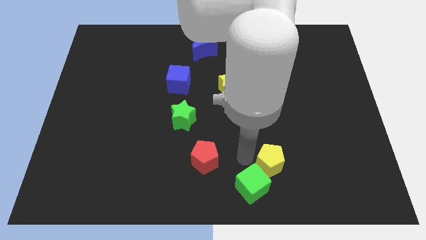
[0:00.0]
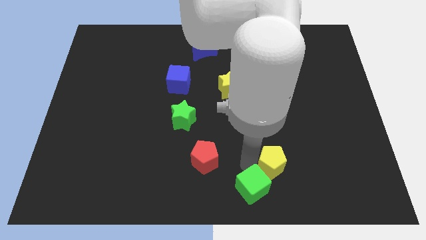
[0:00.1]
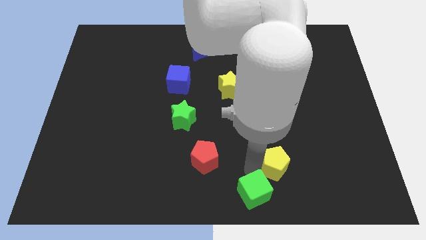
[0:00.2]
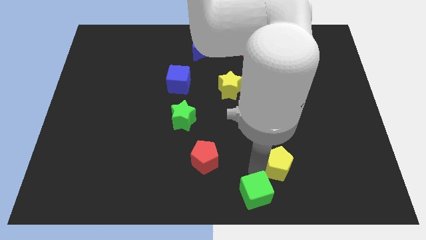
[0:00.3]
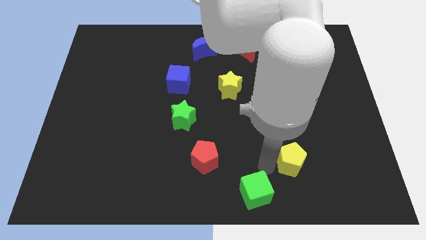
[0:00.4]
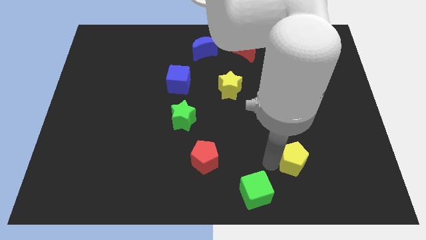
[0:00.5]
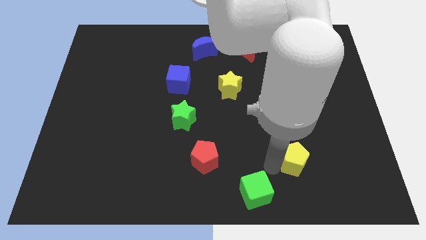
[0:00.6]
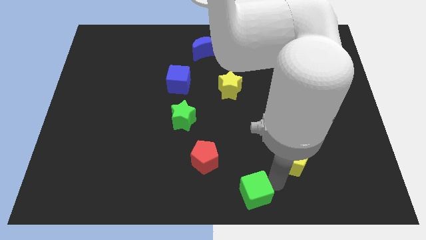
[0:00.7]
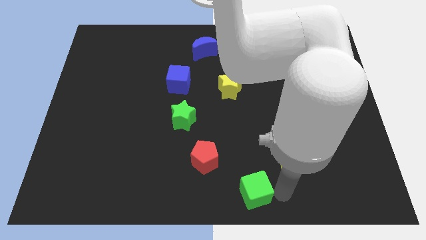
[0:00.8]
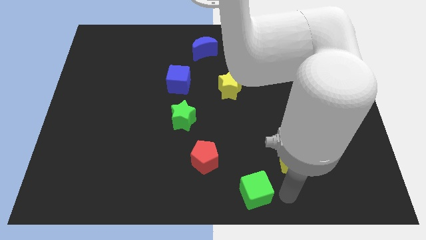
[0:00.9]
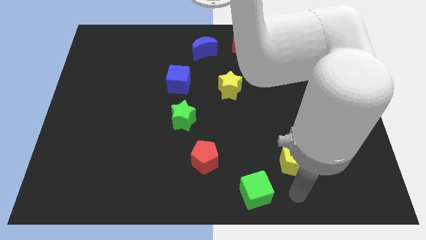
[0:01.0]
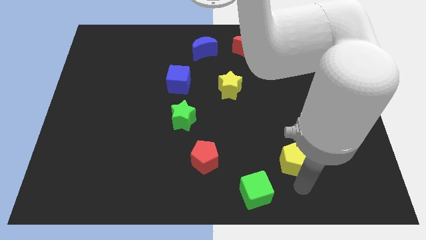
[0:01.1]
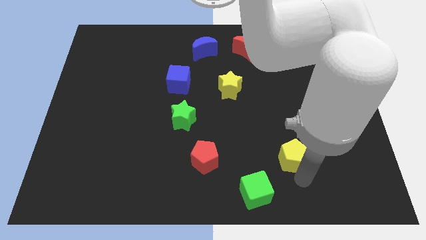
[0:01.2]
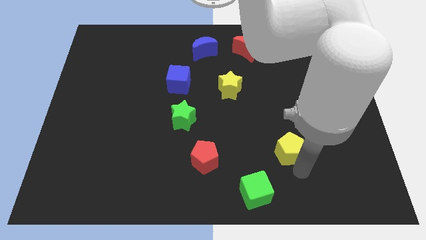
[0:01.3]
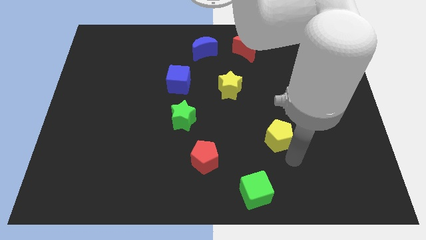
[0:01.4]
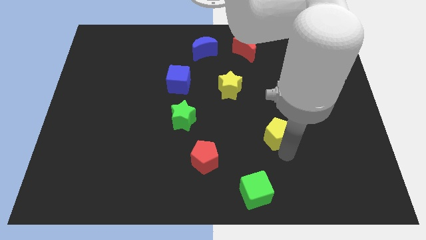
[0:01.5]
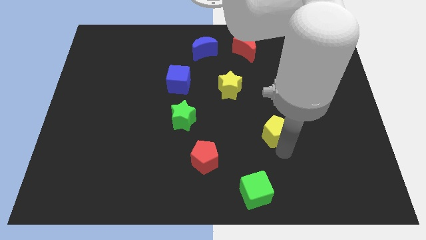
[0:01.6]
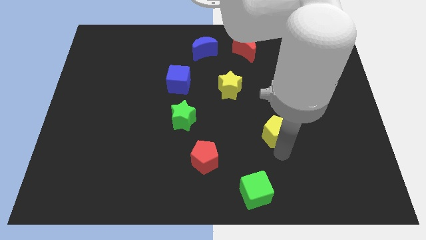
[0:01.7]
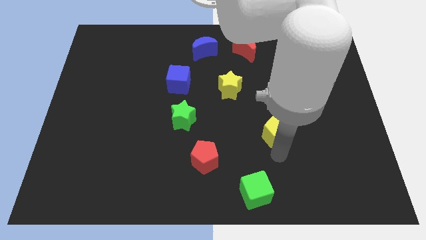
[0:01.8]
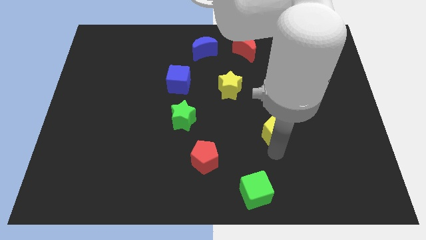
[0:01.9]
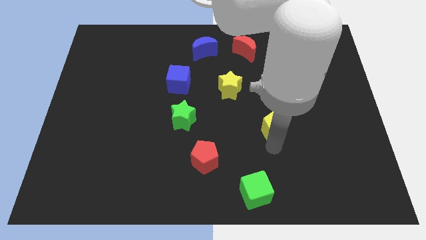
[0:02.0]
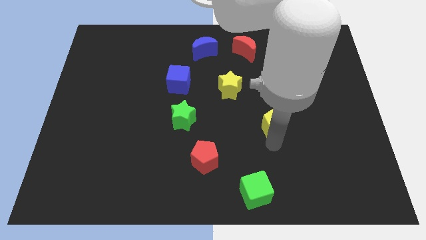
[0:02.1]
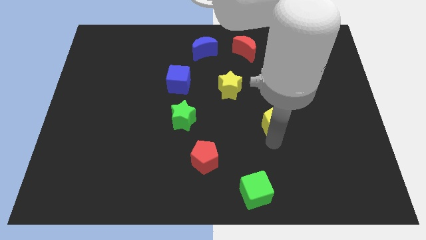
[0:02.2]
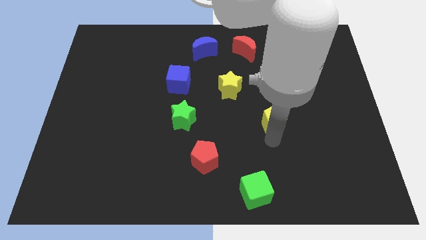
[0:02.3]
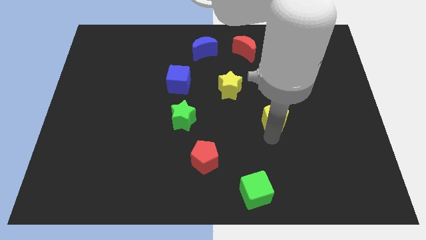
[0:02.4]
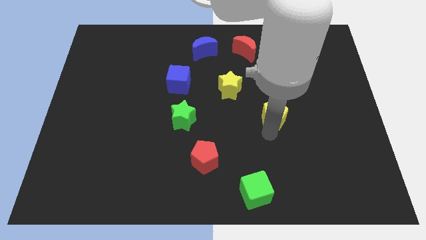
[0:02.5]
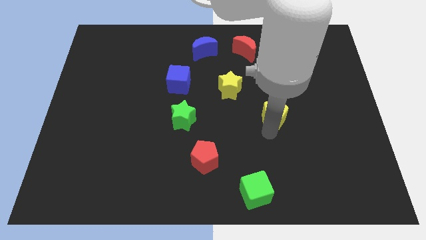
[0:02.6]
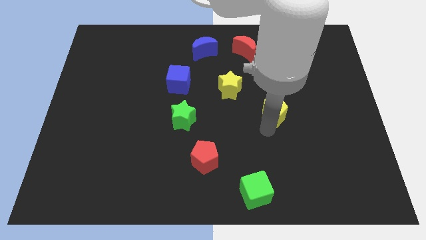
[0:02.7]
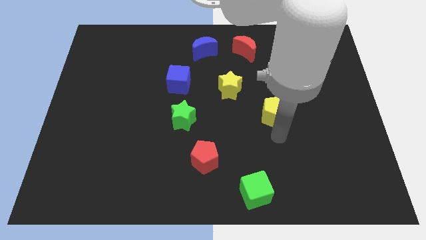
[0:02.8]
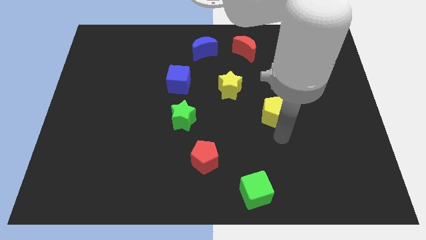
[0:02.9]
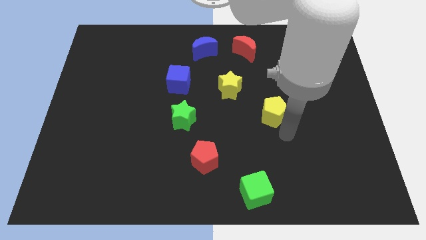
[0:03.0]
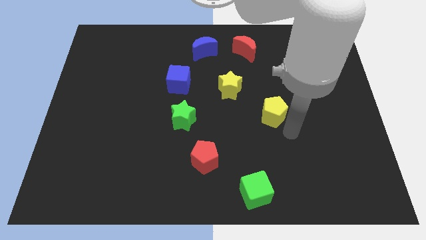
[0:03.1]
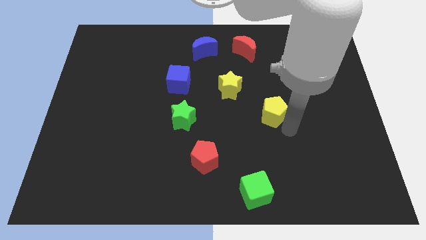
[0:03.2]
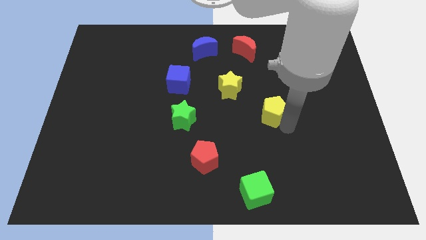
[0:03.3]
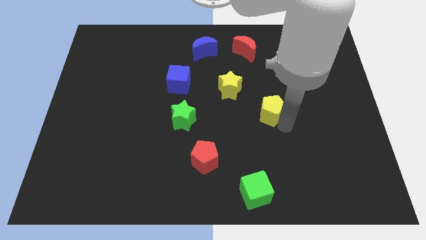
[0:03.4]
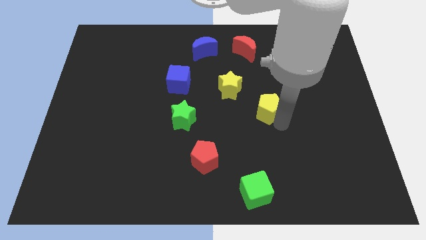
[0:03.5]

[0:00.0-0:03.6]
place the yellow pentagon right to the green star

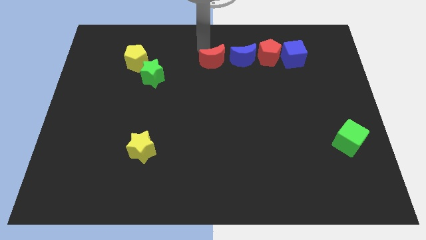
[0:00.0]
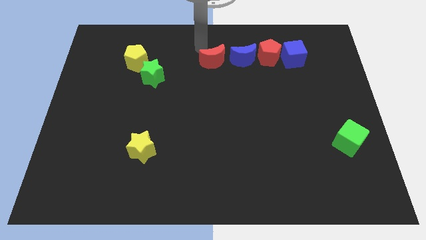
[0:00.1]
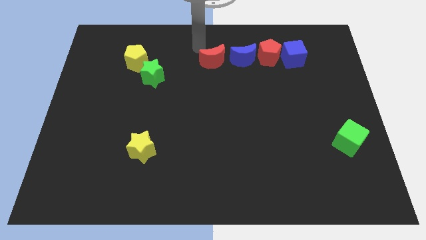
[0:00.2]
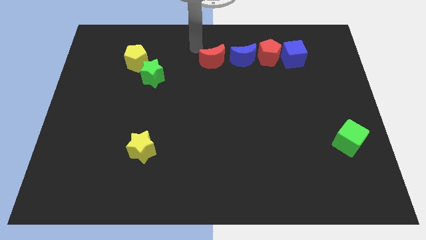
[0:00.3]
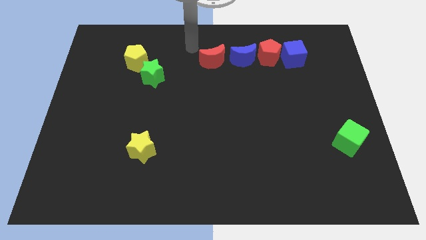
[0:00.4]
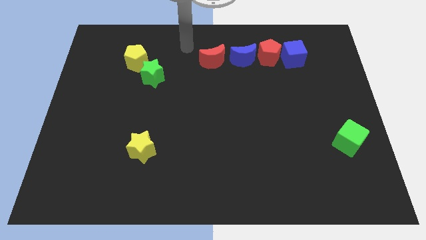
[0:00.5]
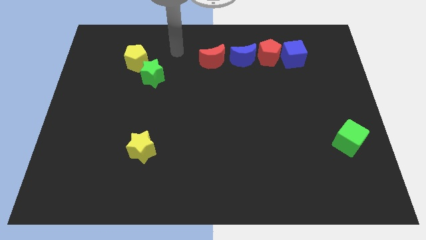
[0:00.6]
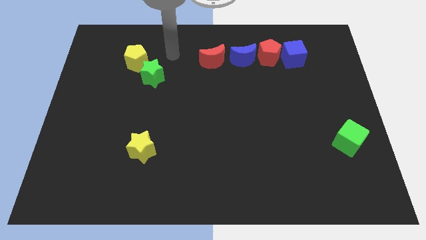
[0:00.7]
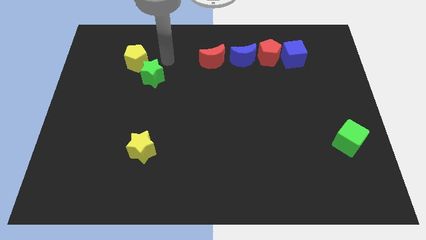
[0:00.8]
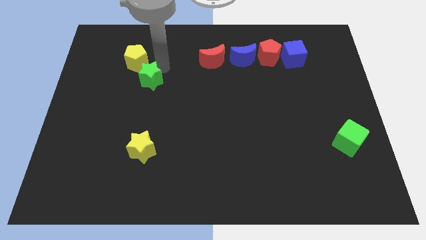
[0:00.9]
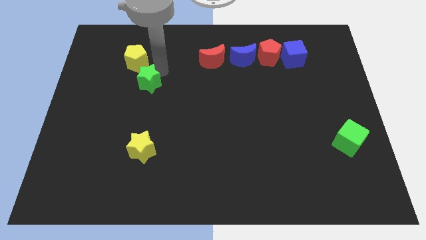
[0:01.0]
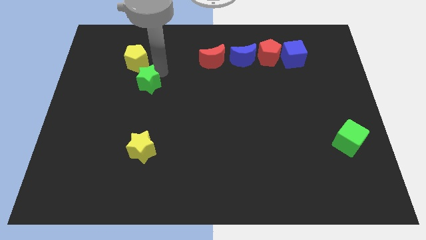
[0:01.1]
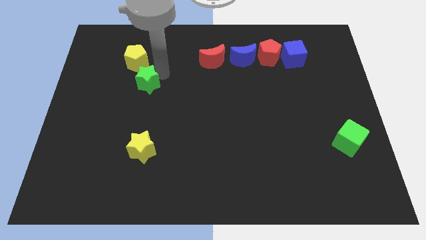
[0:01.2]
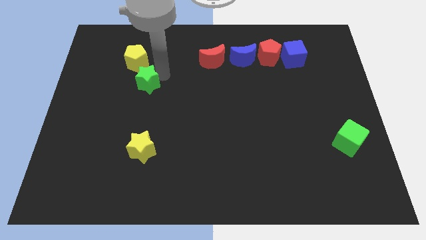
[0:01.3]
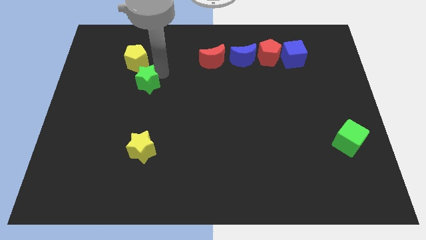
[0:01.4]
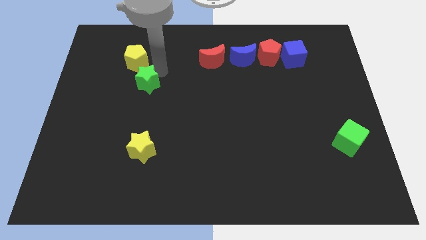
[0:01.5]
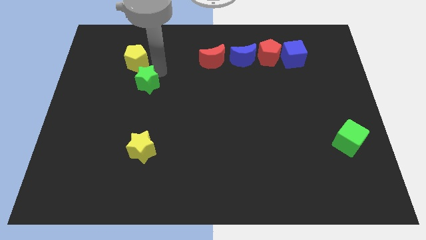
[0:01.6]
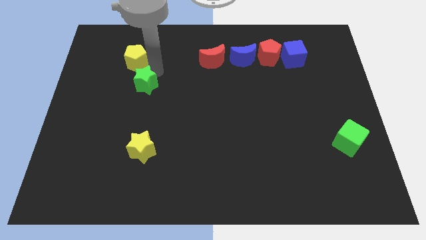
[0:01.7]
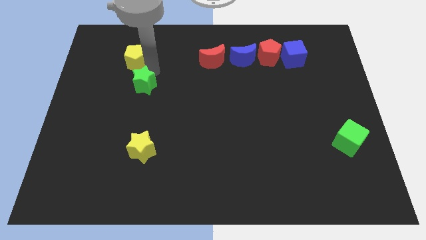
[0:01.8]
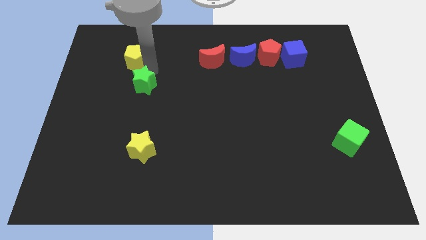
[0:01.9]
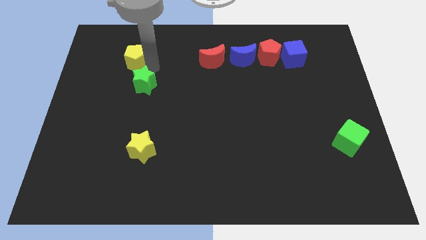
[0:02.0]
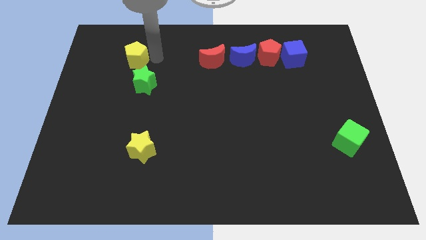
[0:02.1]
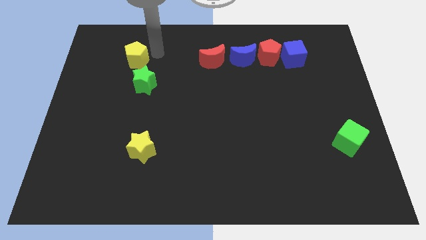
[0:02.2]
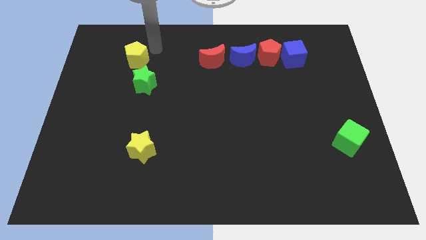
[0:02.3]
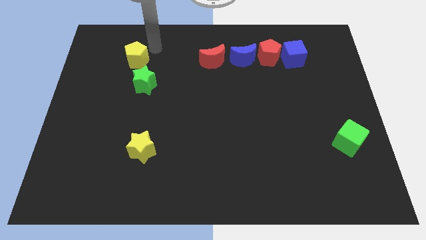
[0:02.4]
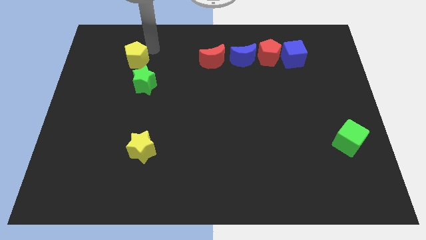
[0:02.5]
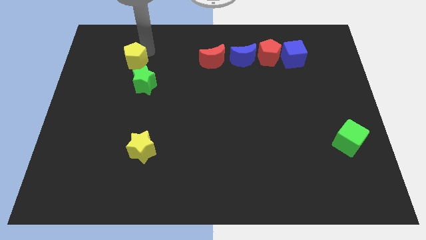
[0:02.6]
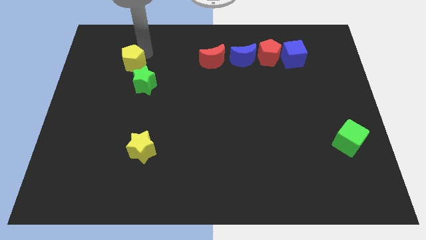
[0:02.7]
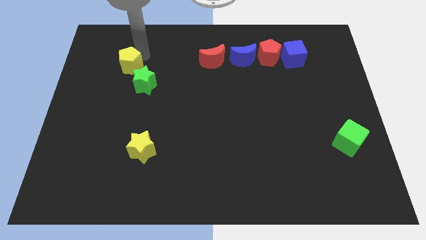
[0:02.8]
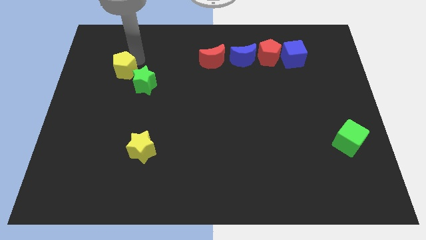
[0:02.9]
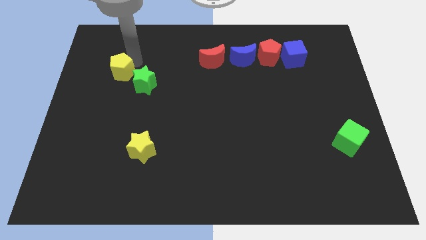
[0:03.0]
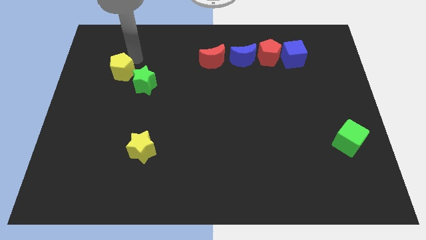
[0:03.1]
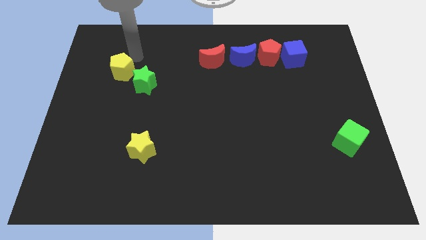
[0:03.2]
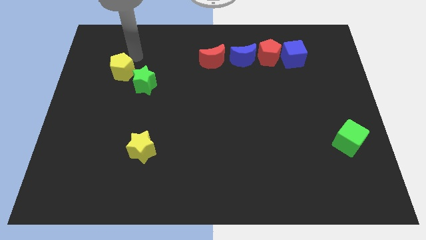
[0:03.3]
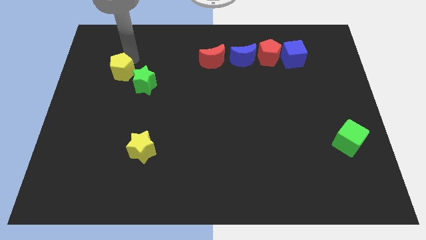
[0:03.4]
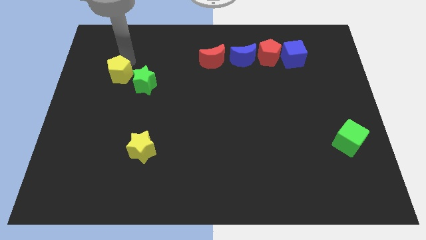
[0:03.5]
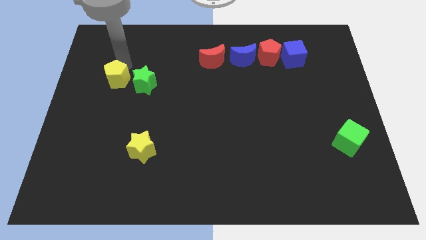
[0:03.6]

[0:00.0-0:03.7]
move the yellow pentagon to the left of the green star

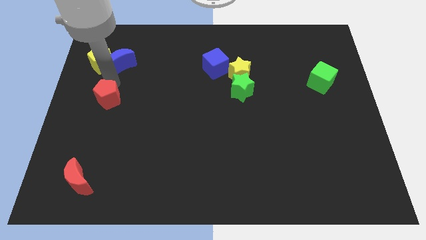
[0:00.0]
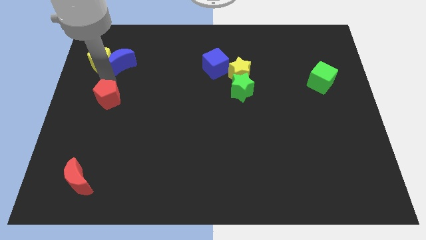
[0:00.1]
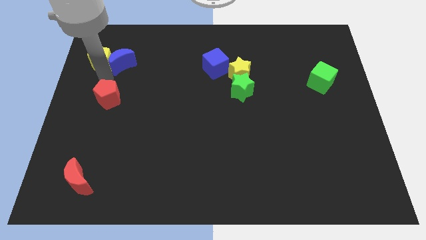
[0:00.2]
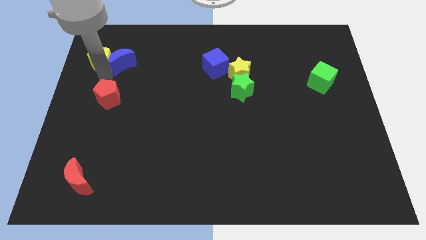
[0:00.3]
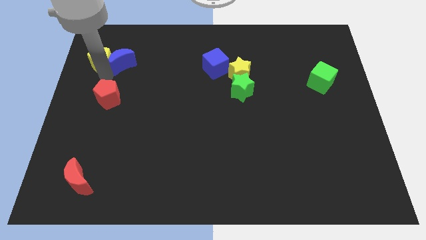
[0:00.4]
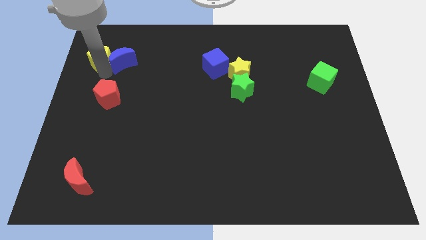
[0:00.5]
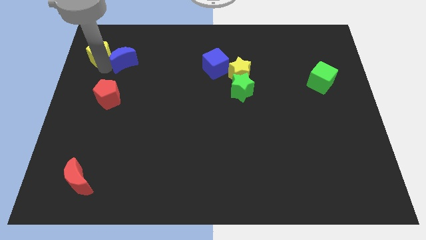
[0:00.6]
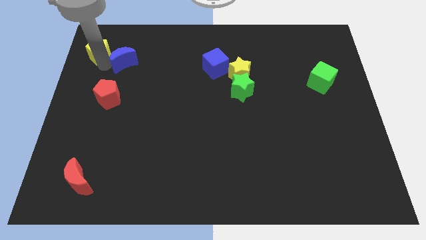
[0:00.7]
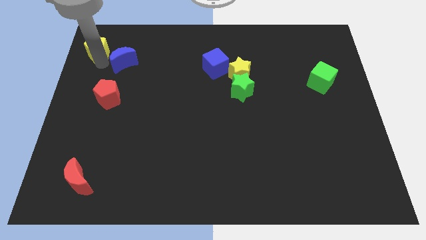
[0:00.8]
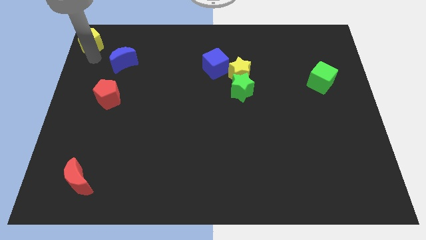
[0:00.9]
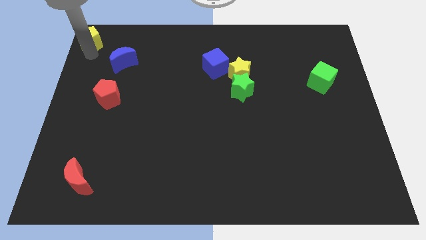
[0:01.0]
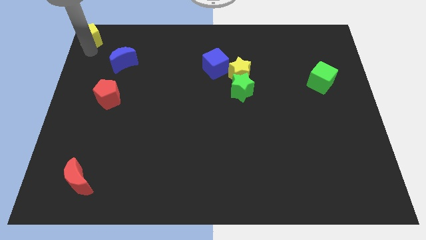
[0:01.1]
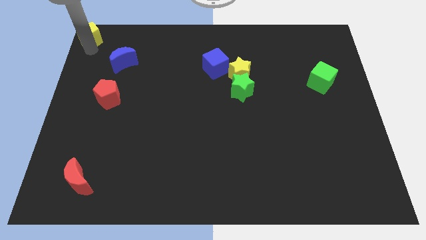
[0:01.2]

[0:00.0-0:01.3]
move yellow pentagon to the top left corner of the board

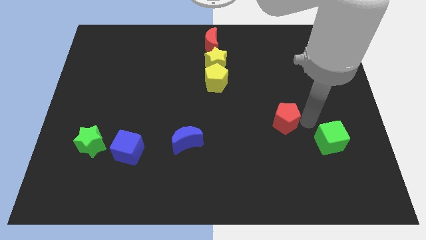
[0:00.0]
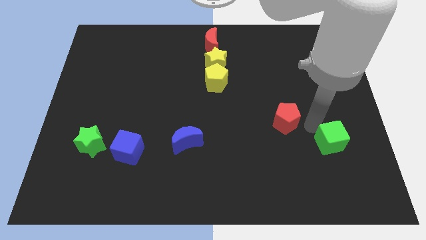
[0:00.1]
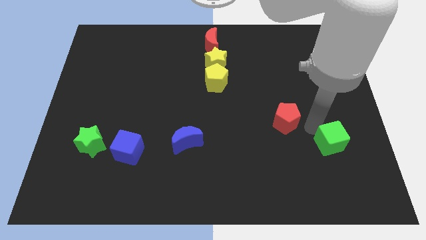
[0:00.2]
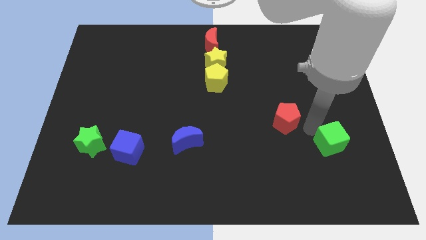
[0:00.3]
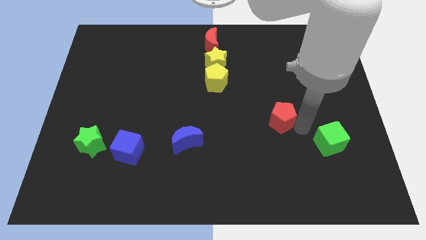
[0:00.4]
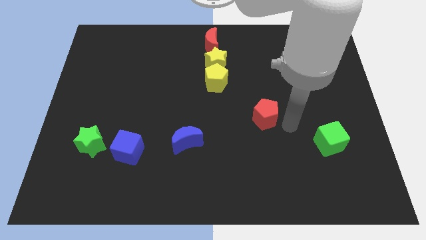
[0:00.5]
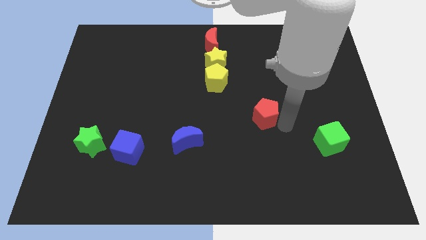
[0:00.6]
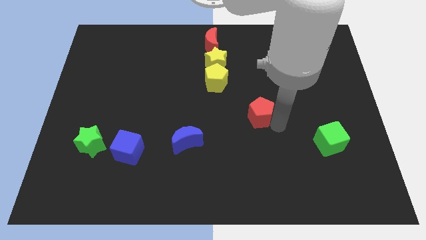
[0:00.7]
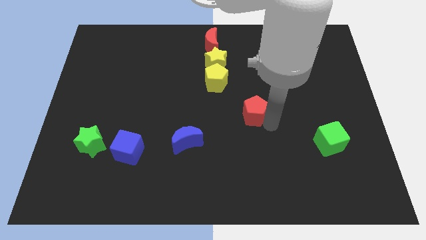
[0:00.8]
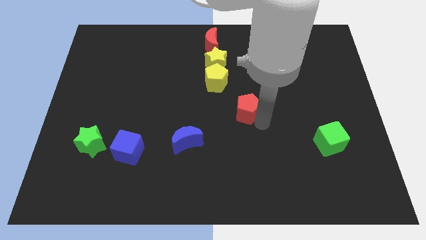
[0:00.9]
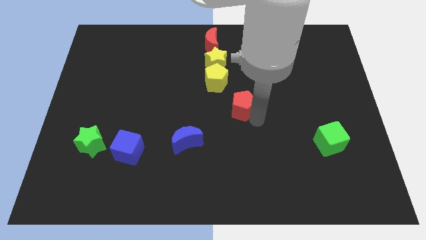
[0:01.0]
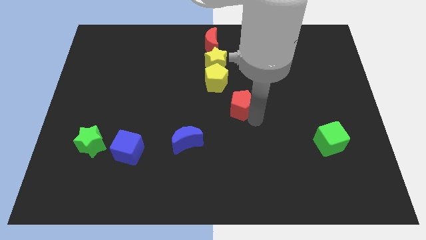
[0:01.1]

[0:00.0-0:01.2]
move red pentagon towards the yellow pentagon
